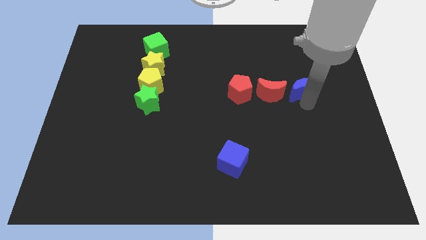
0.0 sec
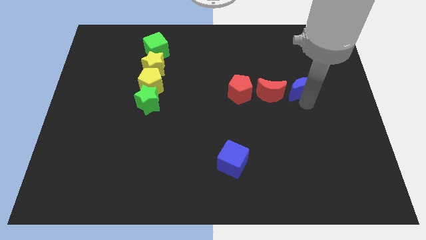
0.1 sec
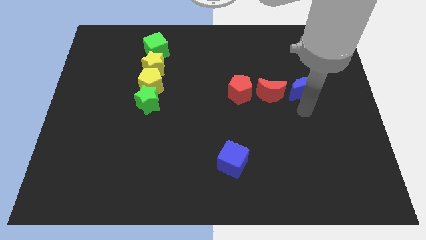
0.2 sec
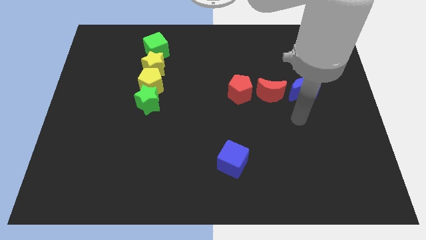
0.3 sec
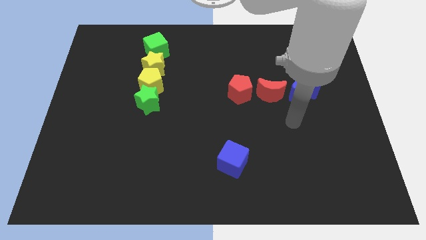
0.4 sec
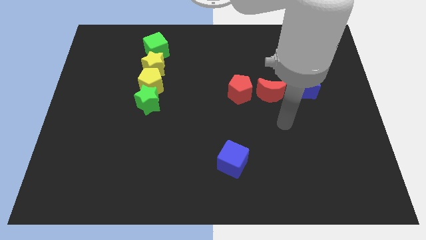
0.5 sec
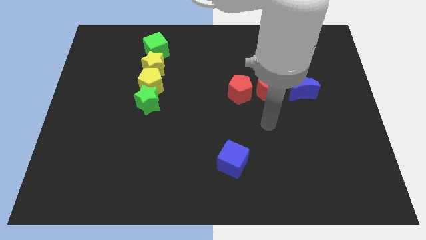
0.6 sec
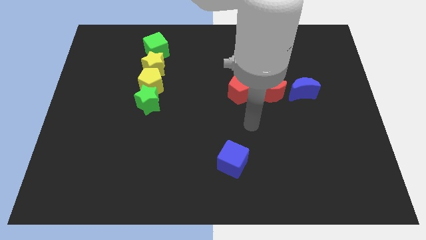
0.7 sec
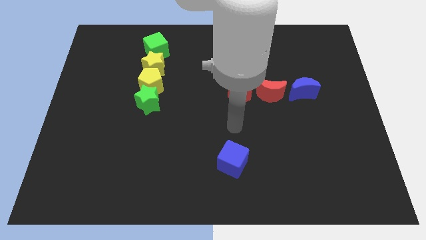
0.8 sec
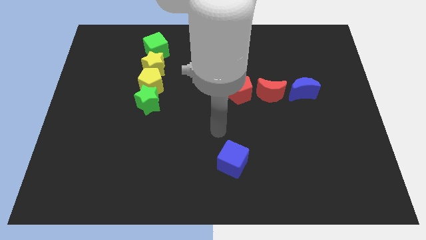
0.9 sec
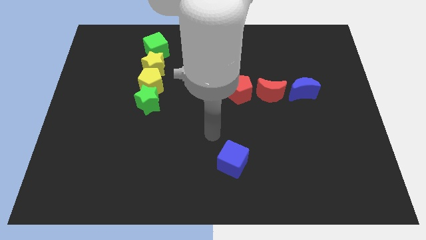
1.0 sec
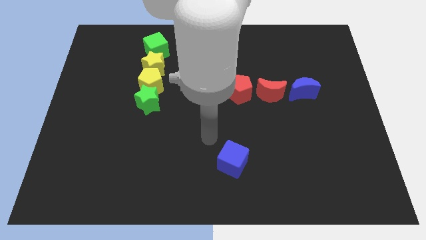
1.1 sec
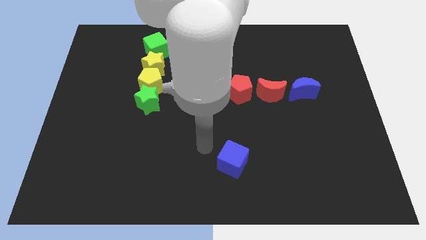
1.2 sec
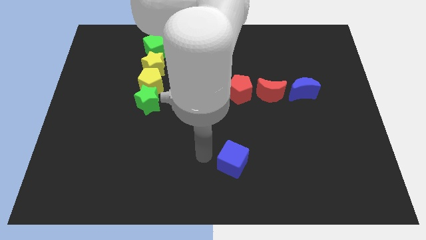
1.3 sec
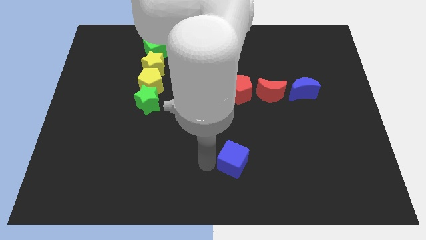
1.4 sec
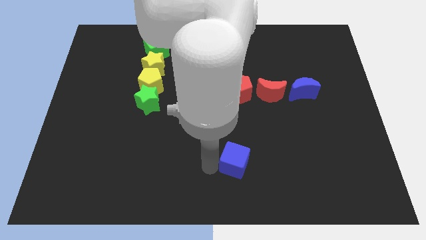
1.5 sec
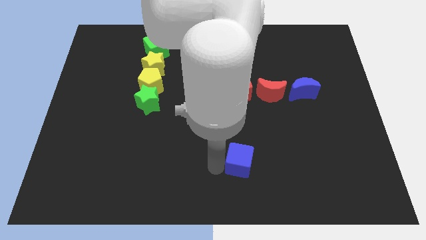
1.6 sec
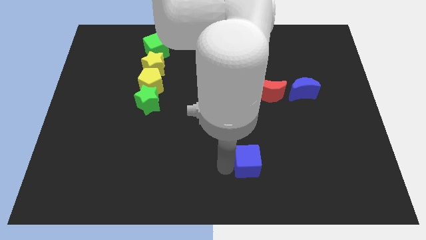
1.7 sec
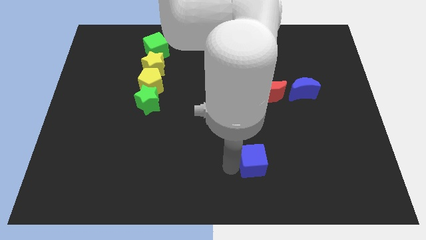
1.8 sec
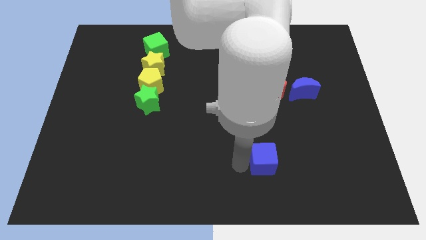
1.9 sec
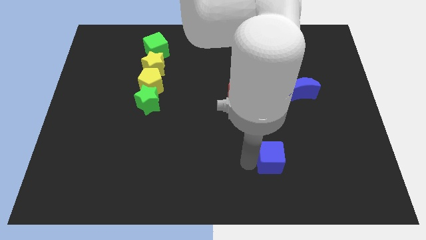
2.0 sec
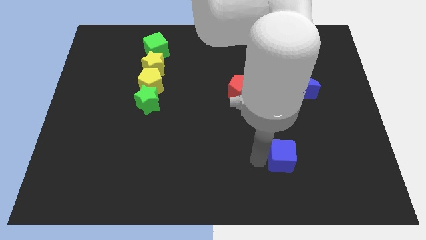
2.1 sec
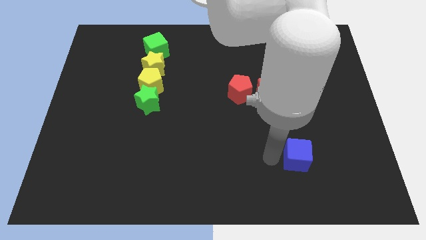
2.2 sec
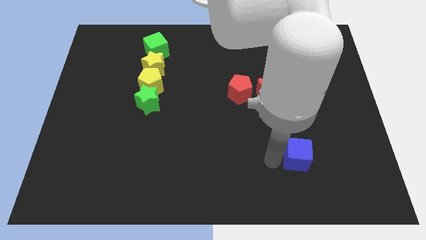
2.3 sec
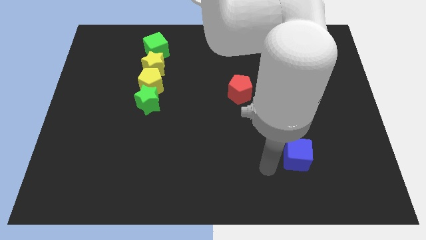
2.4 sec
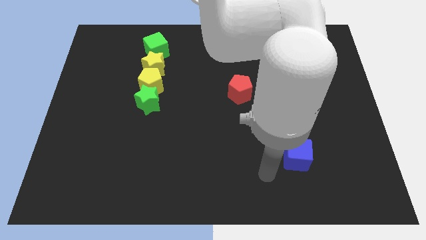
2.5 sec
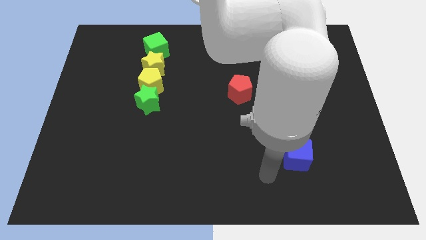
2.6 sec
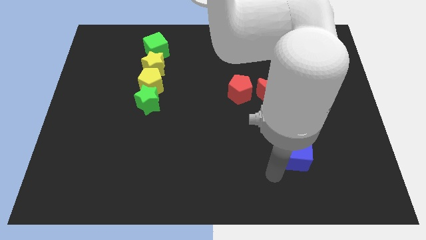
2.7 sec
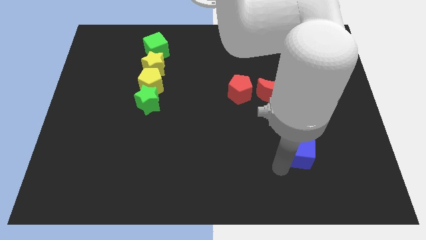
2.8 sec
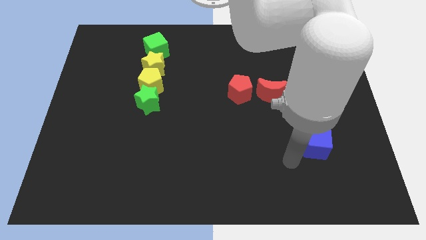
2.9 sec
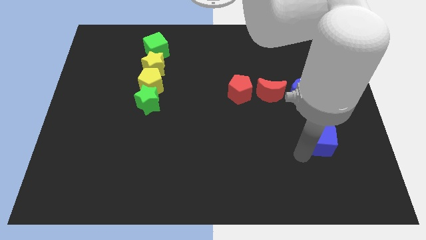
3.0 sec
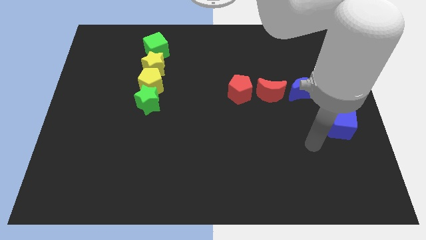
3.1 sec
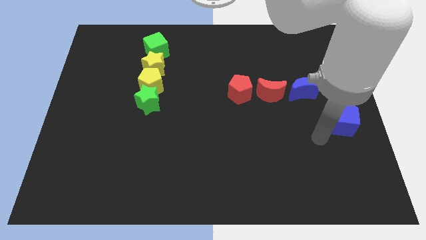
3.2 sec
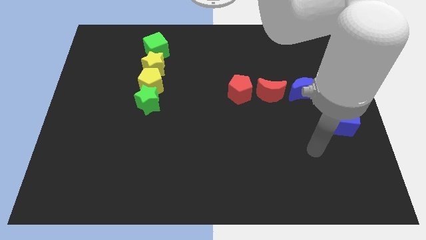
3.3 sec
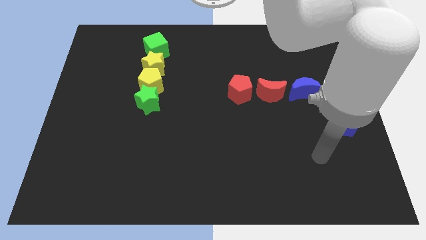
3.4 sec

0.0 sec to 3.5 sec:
push the blue cube towards the right side of the board

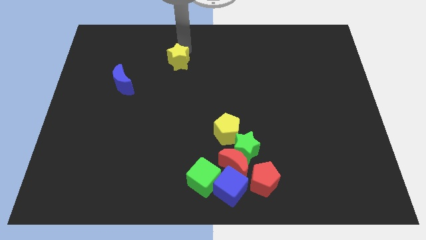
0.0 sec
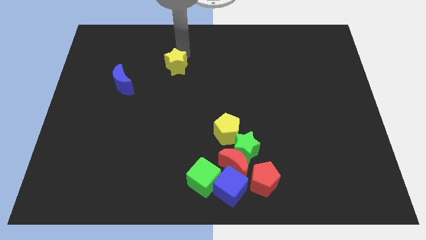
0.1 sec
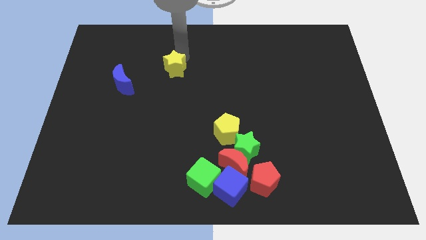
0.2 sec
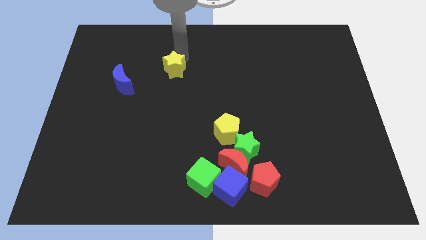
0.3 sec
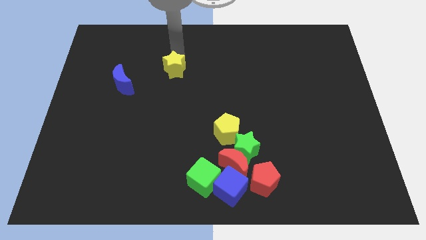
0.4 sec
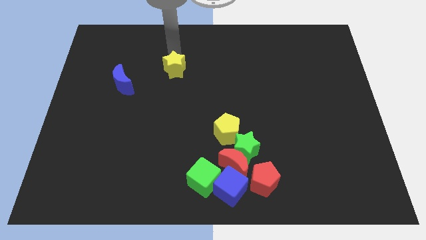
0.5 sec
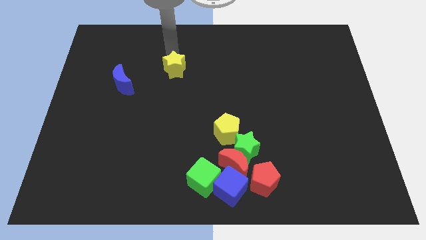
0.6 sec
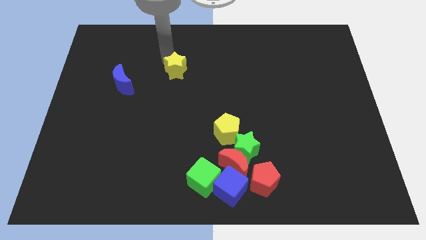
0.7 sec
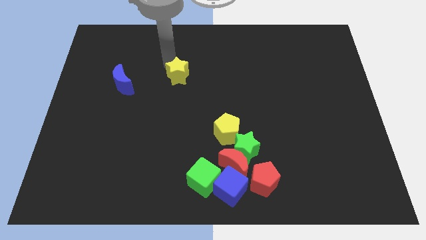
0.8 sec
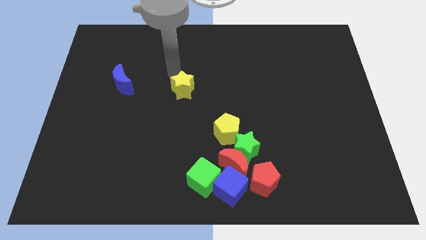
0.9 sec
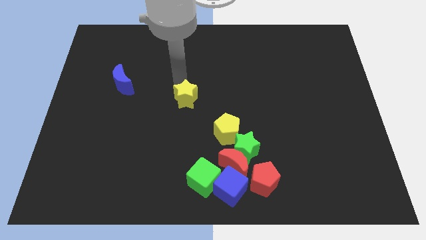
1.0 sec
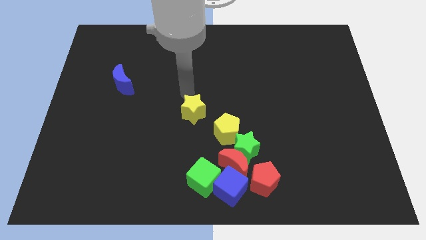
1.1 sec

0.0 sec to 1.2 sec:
push the yellow star towards the center of the board

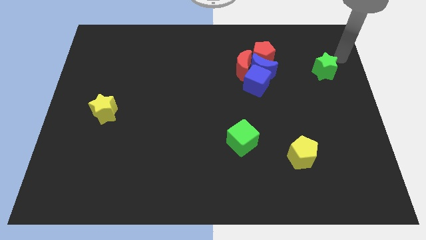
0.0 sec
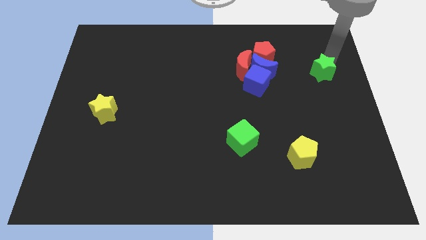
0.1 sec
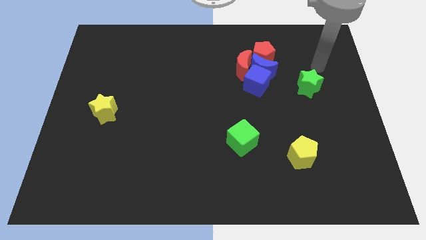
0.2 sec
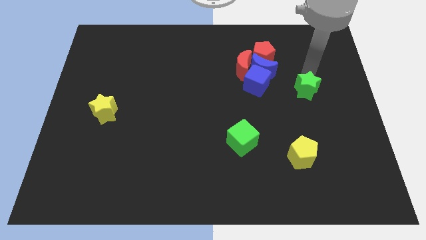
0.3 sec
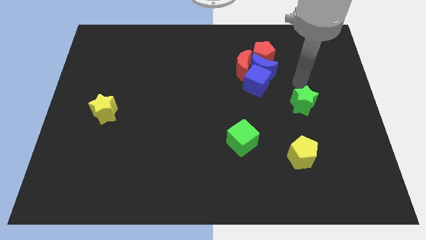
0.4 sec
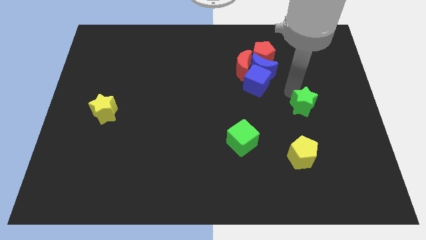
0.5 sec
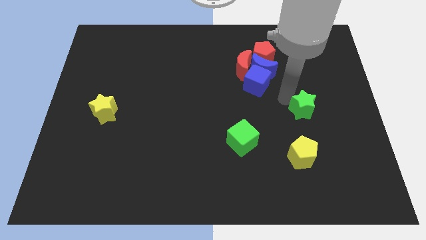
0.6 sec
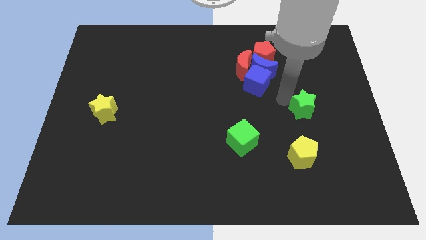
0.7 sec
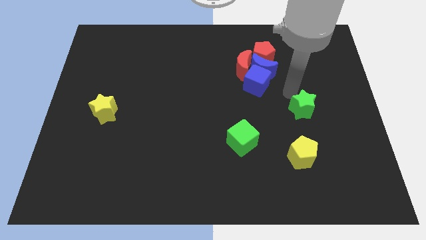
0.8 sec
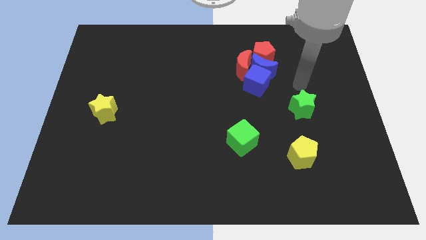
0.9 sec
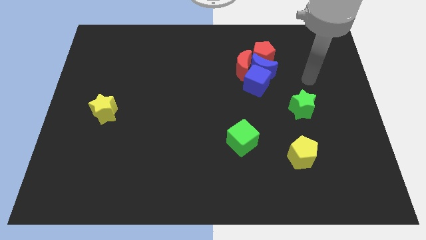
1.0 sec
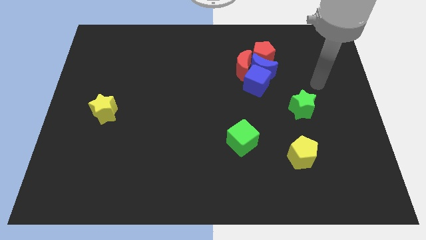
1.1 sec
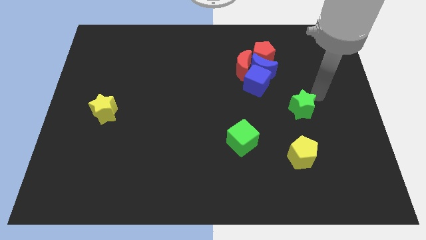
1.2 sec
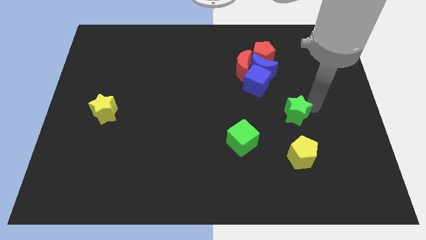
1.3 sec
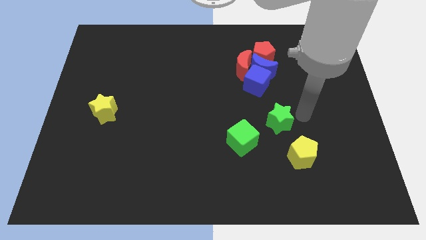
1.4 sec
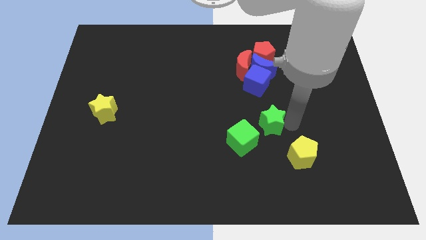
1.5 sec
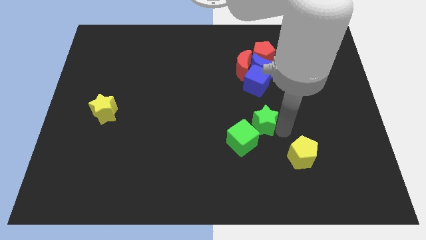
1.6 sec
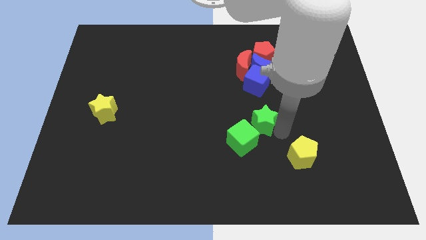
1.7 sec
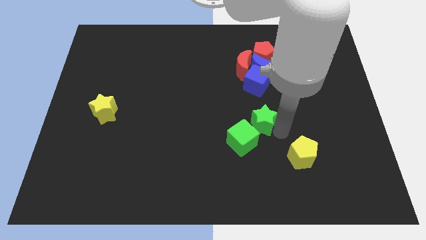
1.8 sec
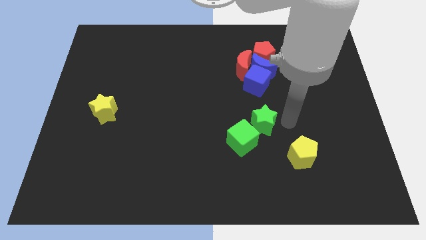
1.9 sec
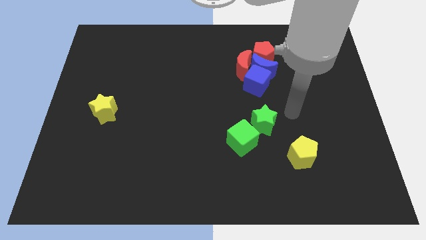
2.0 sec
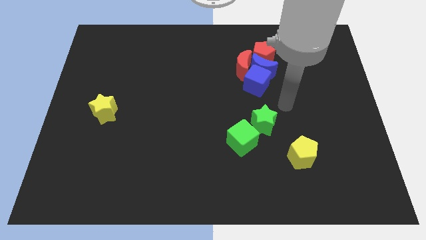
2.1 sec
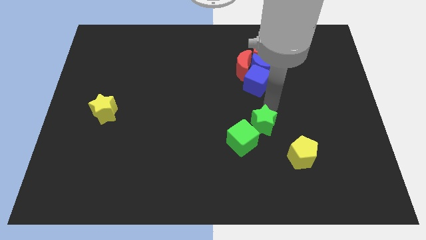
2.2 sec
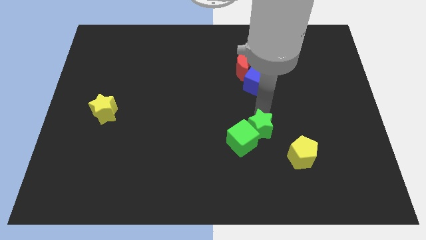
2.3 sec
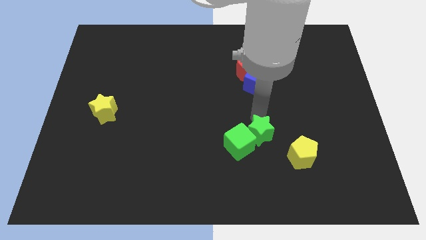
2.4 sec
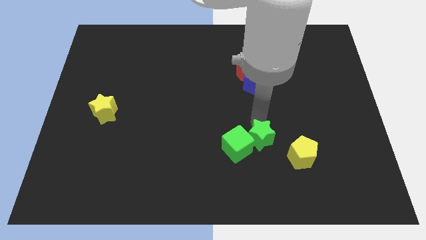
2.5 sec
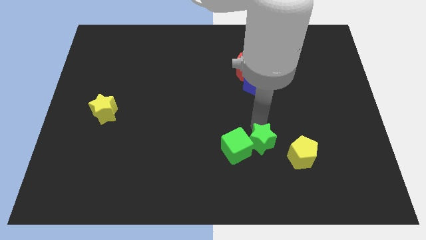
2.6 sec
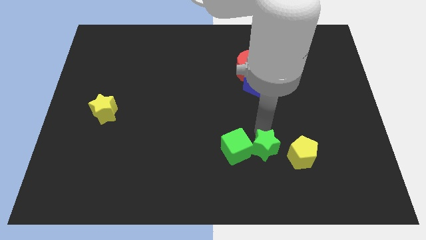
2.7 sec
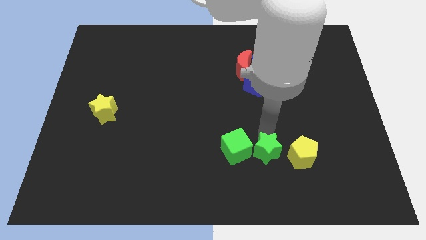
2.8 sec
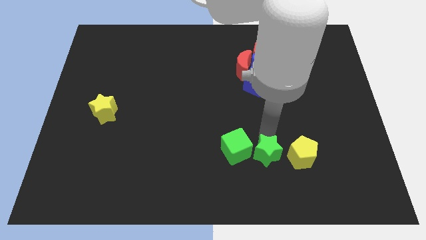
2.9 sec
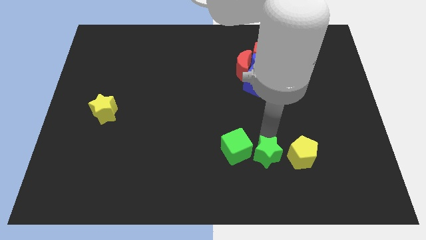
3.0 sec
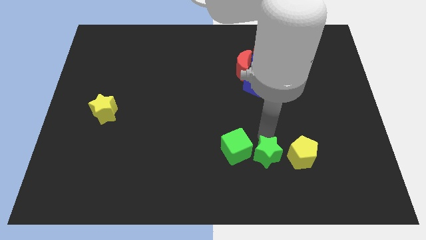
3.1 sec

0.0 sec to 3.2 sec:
move the green star in between the green cube and the yellow pentagon

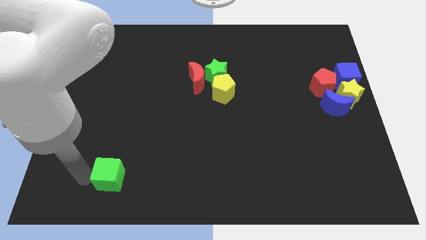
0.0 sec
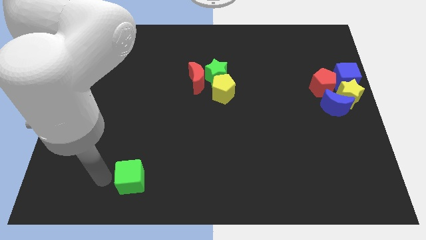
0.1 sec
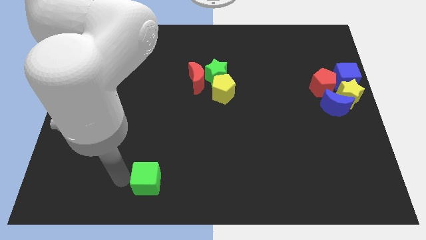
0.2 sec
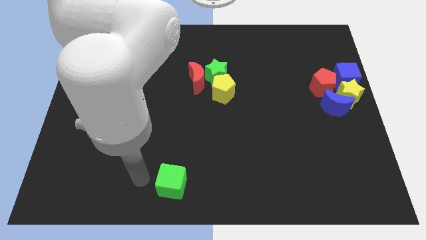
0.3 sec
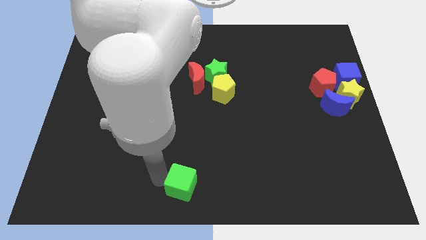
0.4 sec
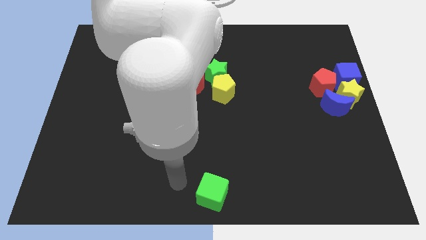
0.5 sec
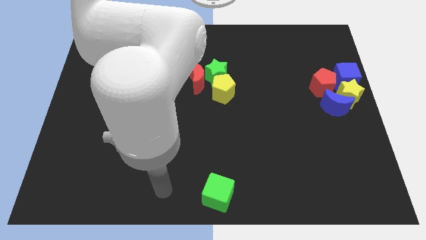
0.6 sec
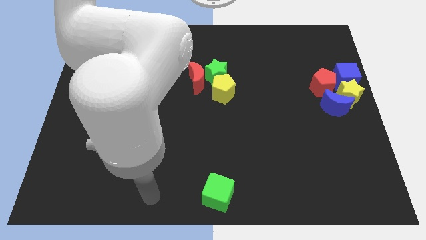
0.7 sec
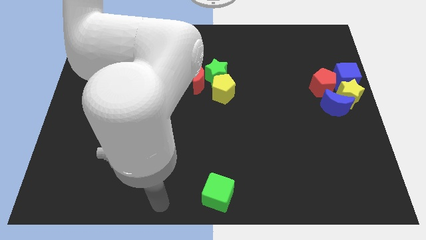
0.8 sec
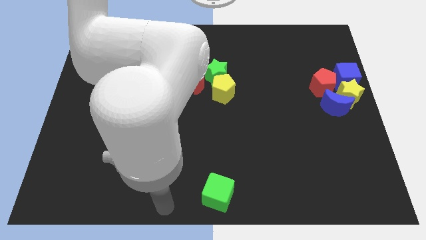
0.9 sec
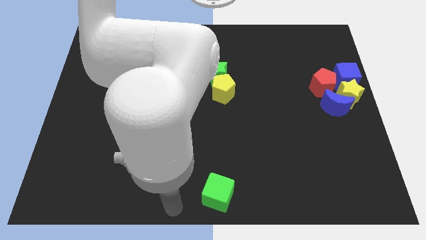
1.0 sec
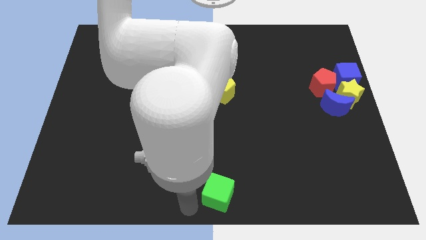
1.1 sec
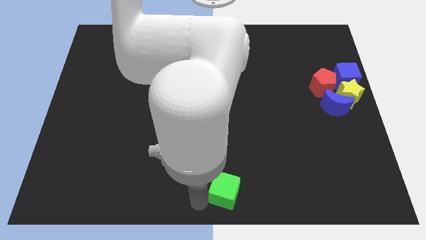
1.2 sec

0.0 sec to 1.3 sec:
move the green cube to the bottom center of the table
